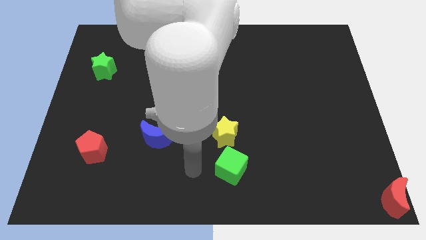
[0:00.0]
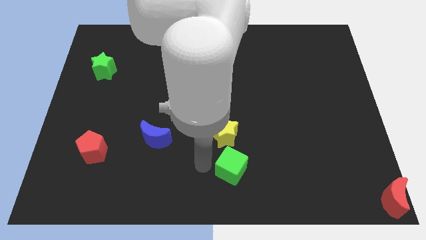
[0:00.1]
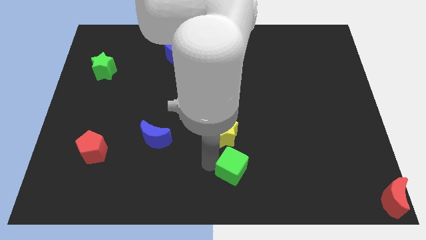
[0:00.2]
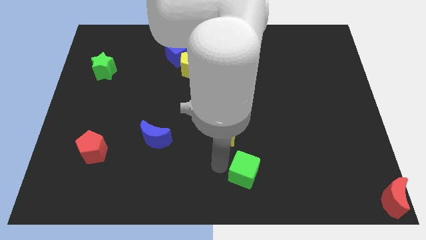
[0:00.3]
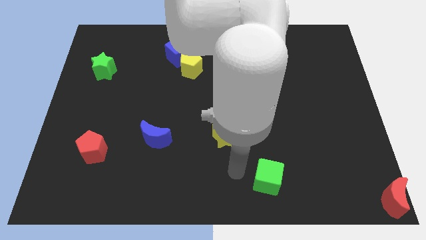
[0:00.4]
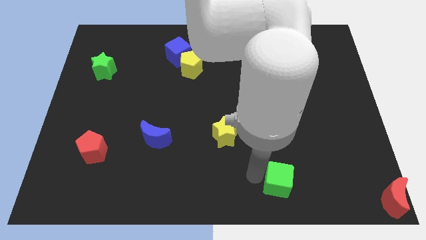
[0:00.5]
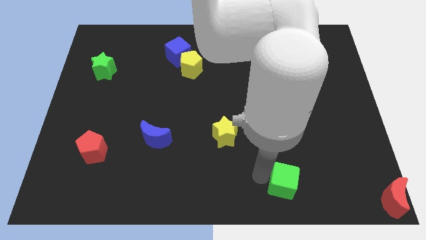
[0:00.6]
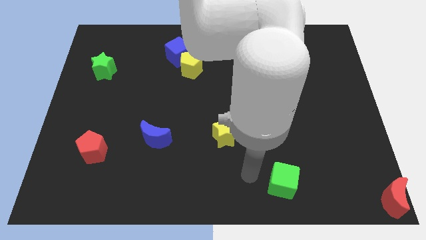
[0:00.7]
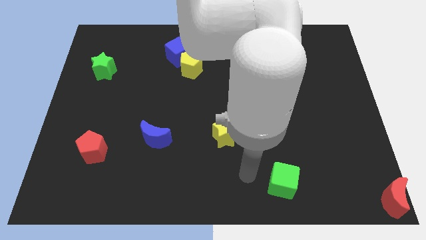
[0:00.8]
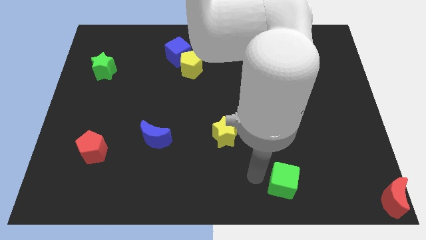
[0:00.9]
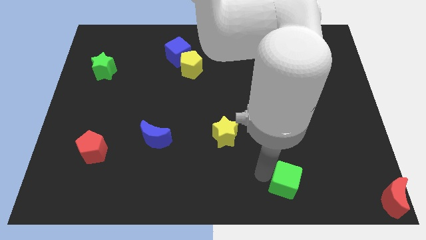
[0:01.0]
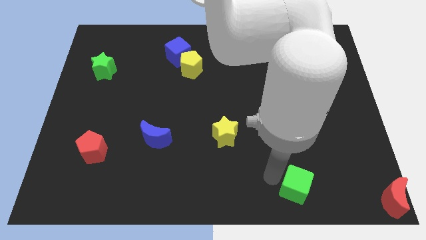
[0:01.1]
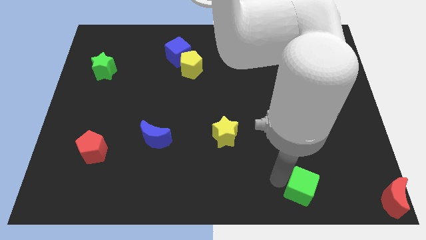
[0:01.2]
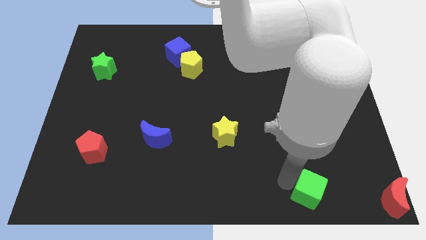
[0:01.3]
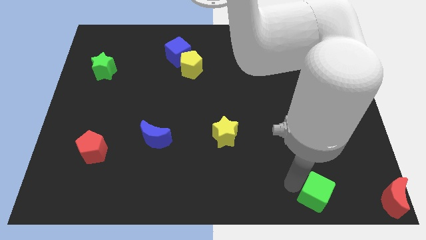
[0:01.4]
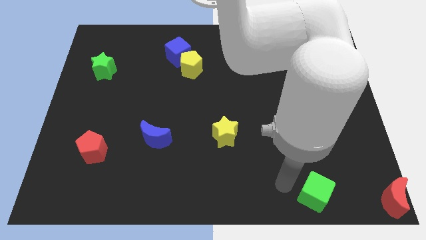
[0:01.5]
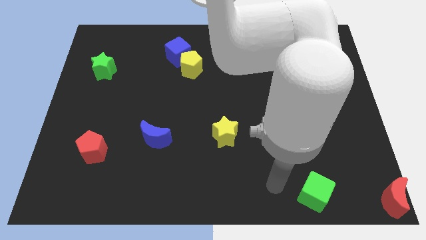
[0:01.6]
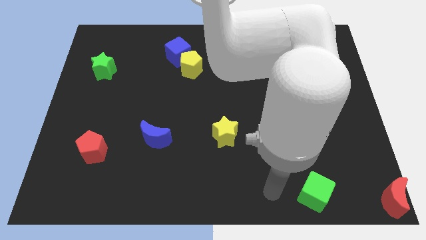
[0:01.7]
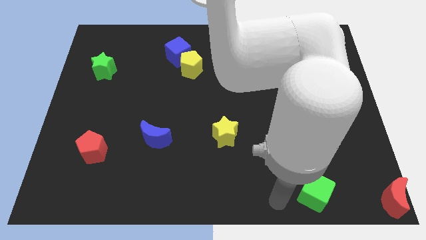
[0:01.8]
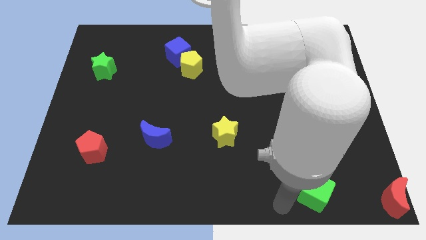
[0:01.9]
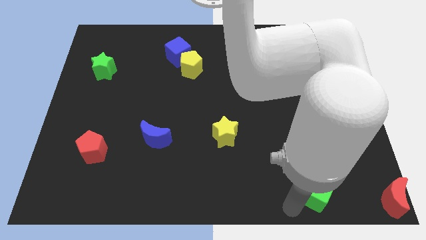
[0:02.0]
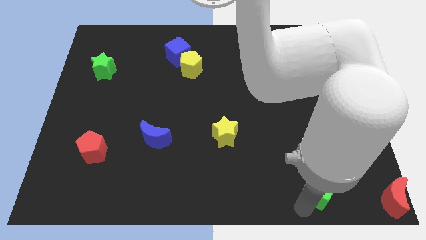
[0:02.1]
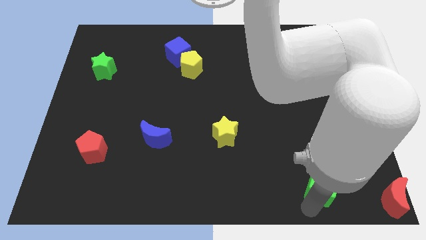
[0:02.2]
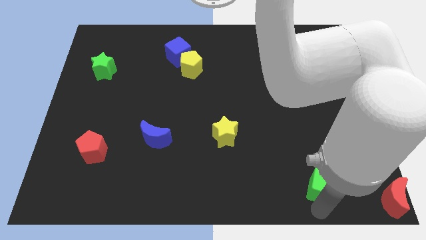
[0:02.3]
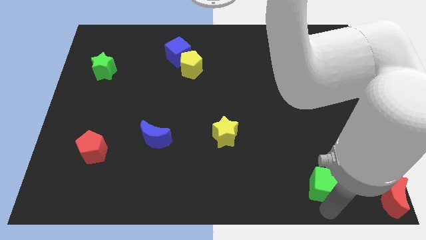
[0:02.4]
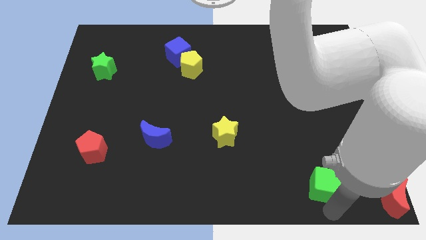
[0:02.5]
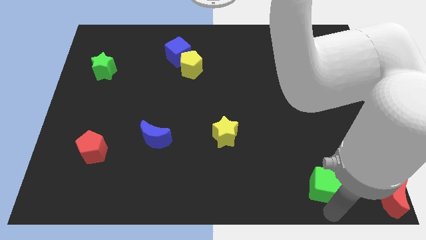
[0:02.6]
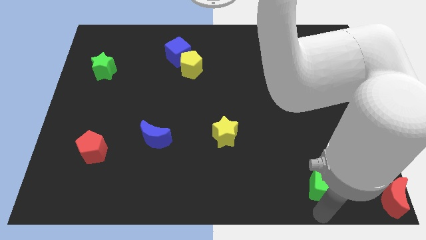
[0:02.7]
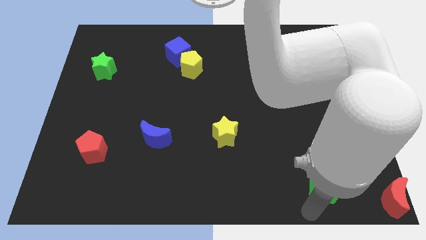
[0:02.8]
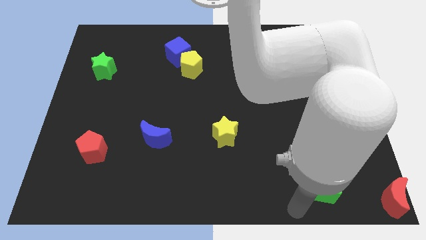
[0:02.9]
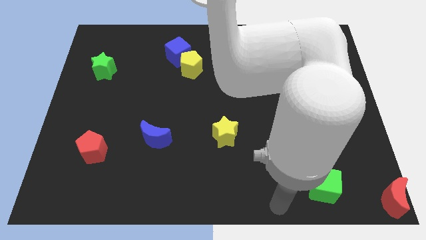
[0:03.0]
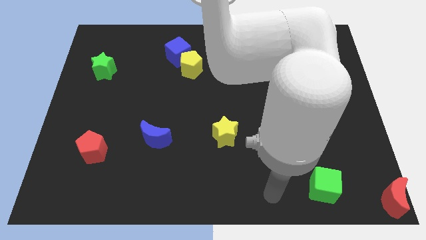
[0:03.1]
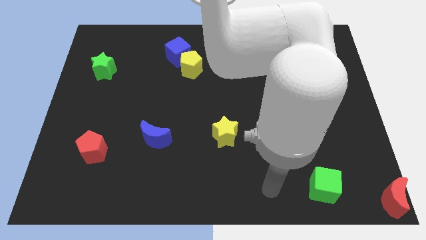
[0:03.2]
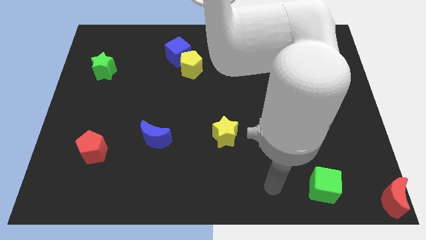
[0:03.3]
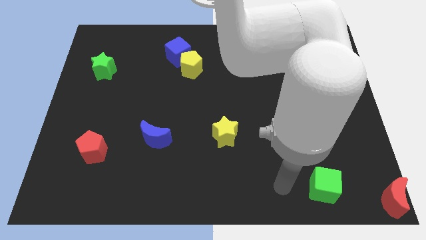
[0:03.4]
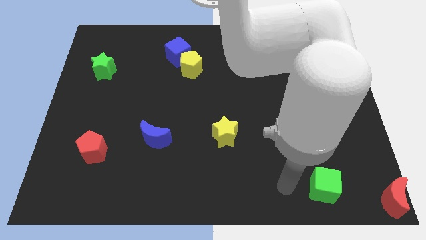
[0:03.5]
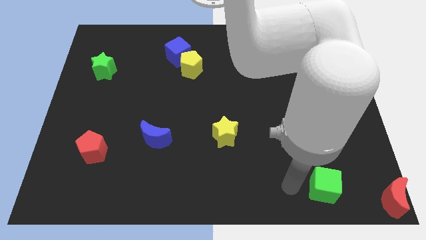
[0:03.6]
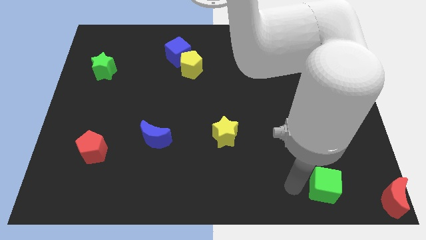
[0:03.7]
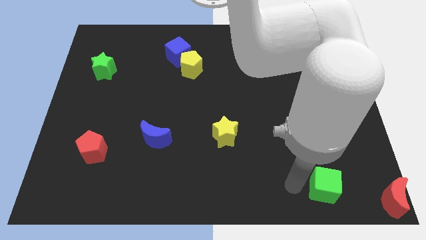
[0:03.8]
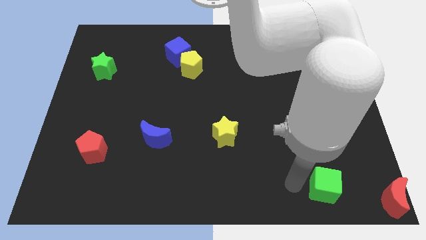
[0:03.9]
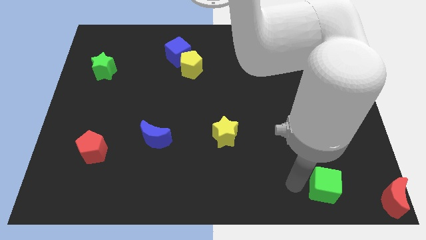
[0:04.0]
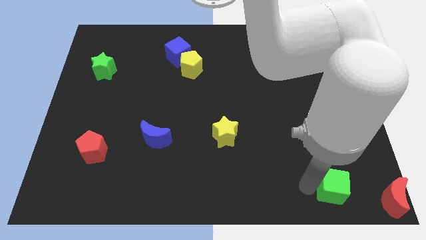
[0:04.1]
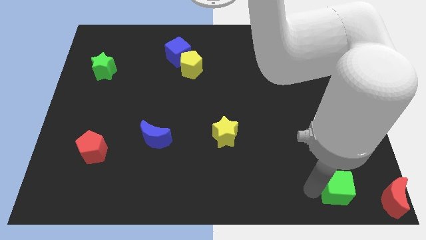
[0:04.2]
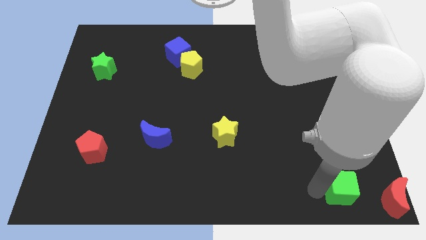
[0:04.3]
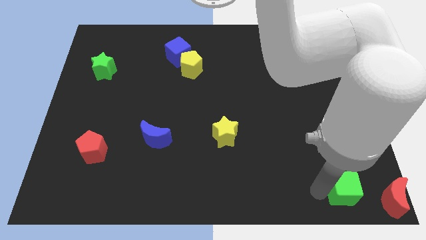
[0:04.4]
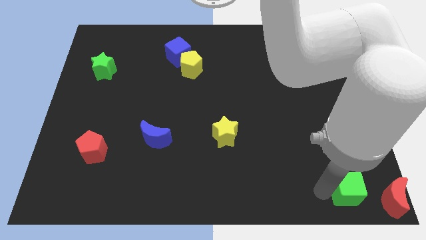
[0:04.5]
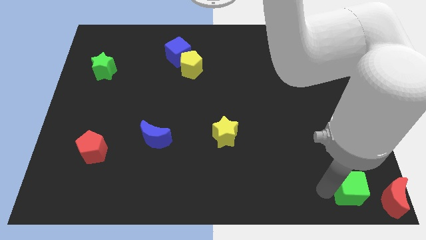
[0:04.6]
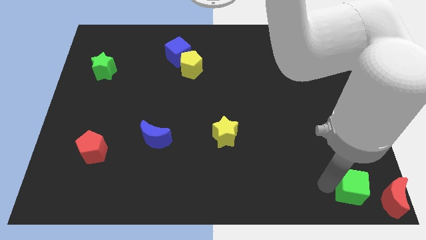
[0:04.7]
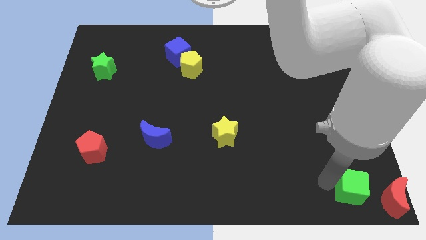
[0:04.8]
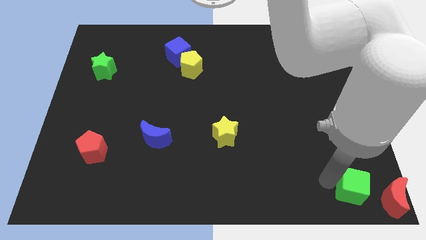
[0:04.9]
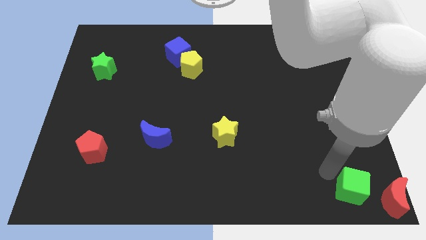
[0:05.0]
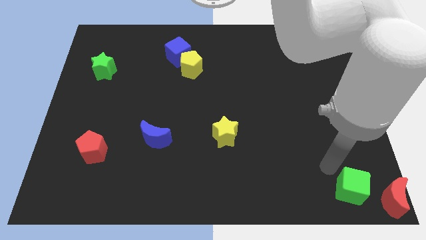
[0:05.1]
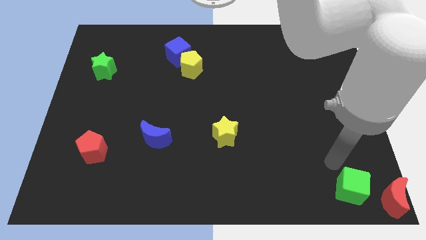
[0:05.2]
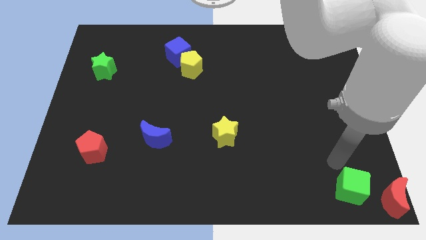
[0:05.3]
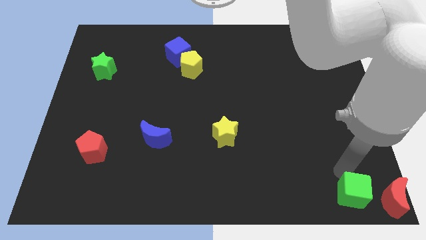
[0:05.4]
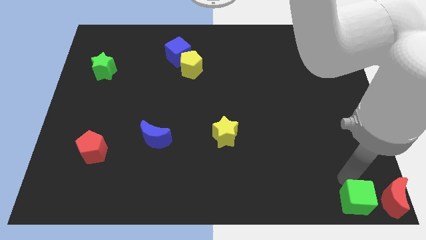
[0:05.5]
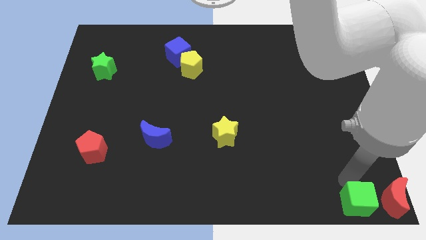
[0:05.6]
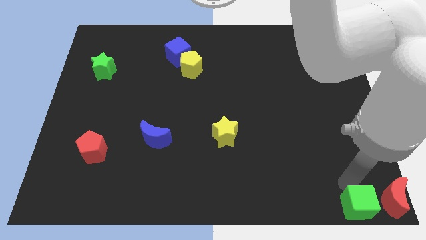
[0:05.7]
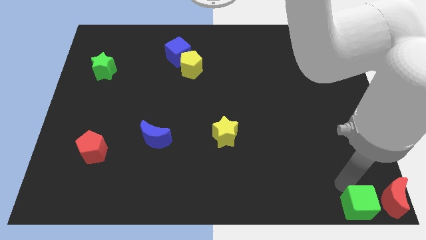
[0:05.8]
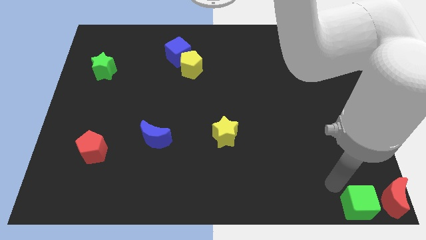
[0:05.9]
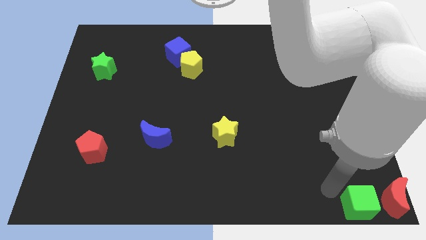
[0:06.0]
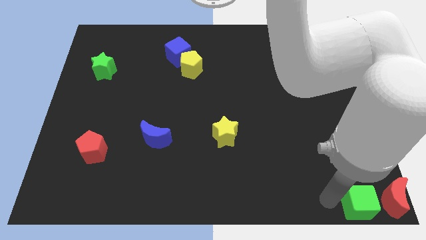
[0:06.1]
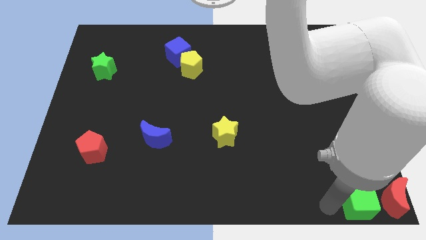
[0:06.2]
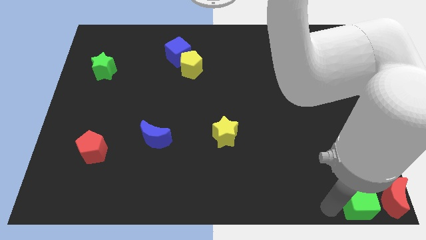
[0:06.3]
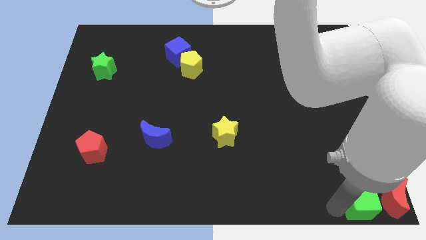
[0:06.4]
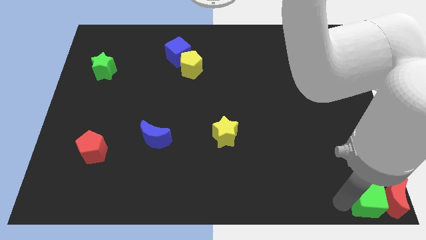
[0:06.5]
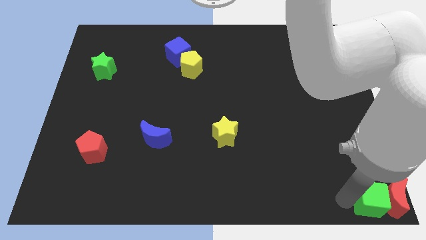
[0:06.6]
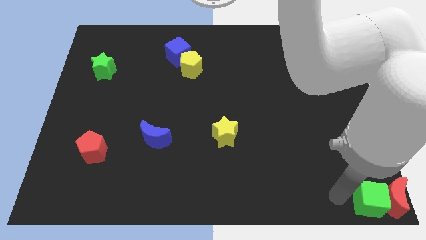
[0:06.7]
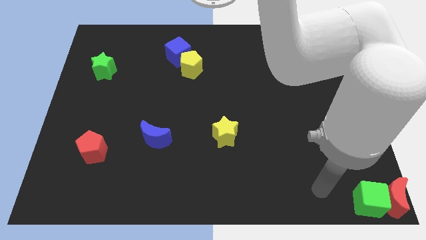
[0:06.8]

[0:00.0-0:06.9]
push the green cube to the left side of the red moon

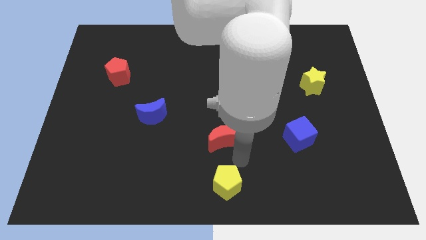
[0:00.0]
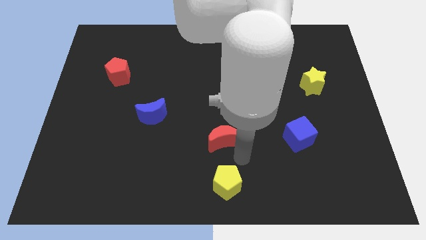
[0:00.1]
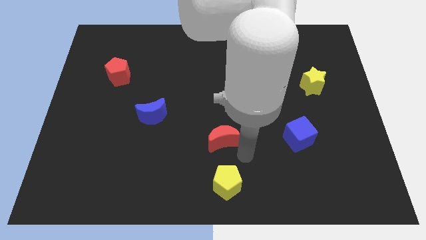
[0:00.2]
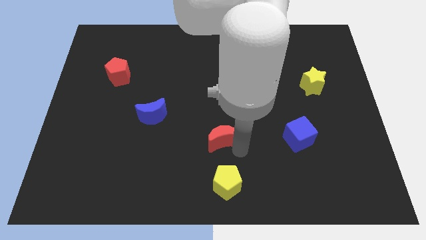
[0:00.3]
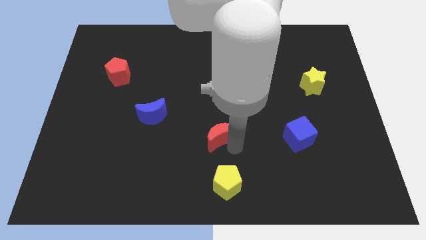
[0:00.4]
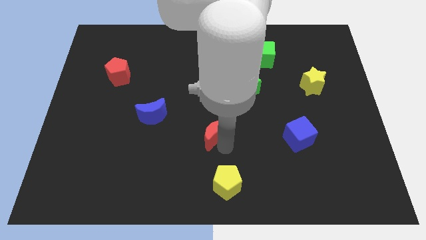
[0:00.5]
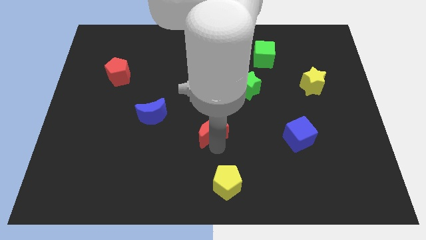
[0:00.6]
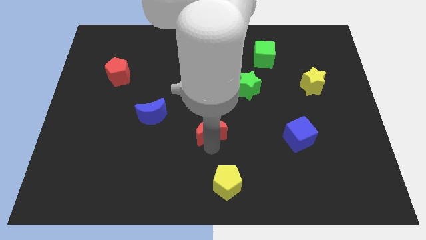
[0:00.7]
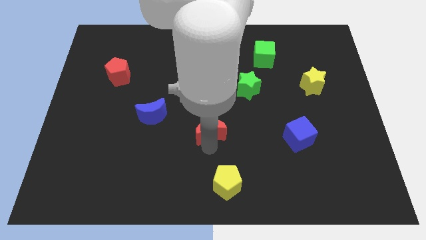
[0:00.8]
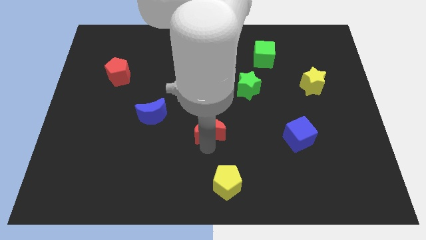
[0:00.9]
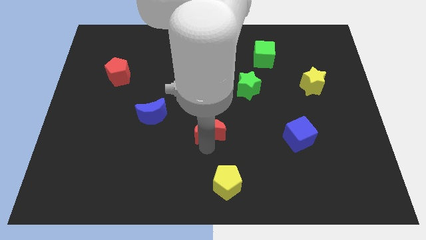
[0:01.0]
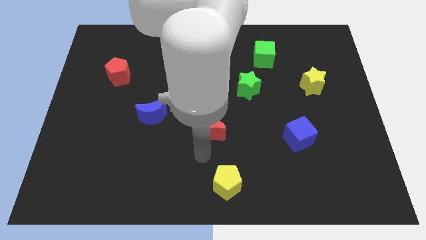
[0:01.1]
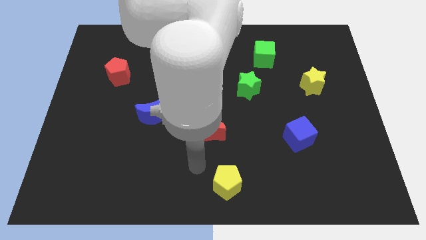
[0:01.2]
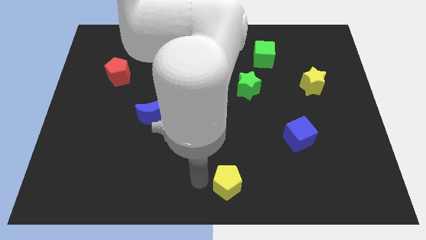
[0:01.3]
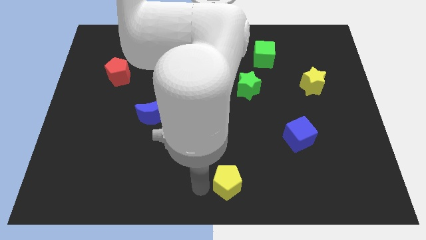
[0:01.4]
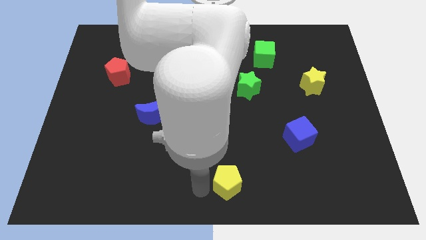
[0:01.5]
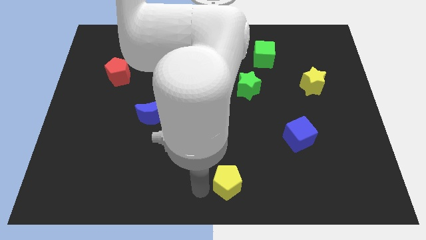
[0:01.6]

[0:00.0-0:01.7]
move the red moon towards the top side
